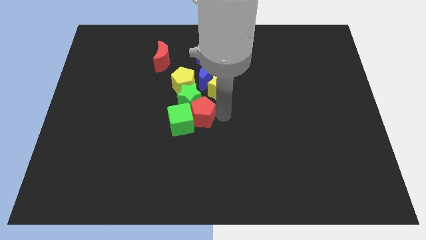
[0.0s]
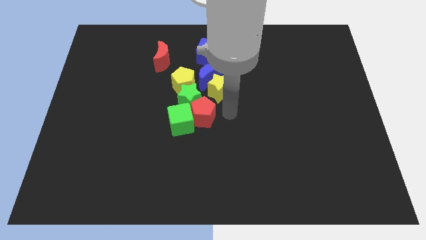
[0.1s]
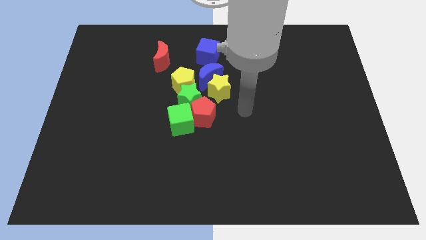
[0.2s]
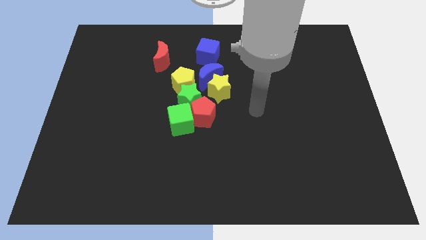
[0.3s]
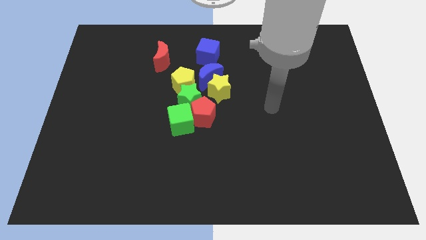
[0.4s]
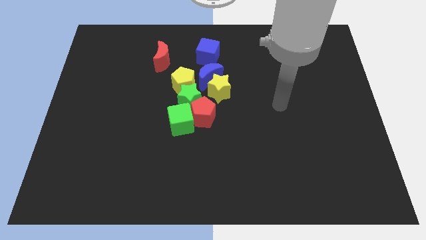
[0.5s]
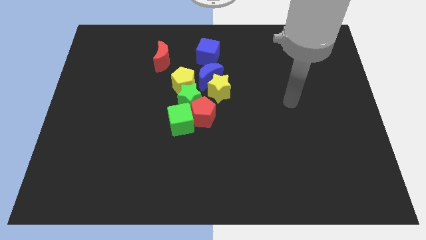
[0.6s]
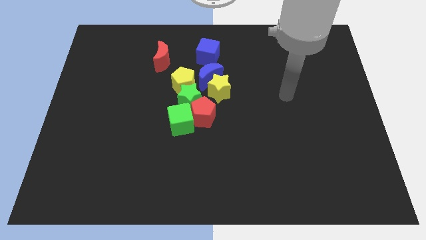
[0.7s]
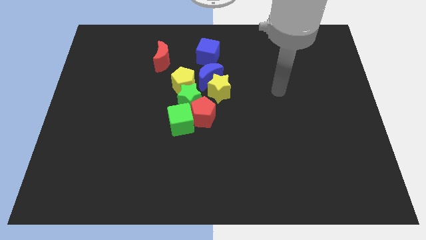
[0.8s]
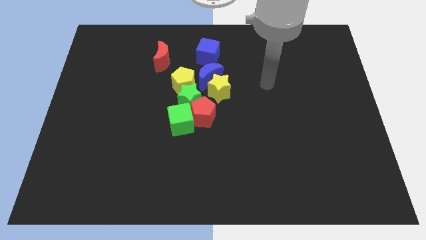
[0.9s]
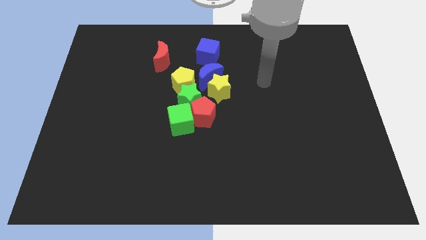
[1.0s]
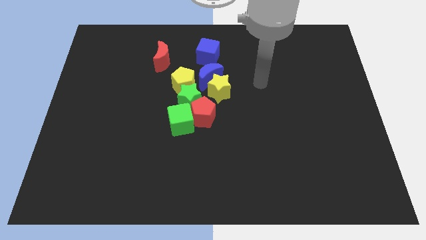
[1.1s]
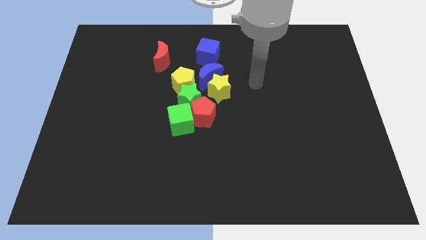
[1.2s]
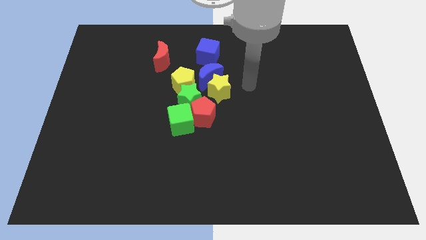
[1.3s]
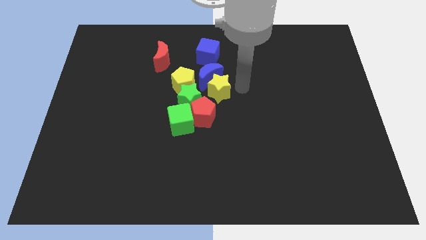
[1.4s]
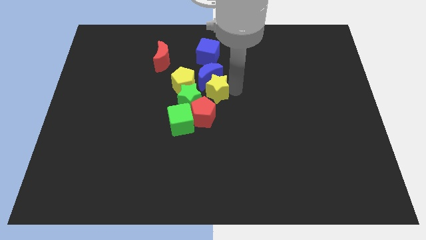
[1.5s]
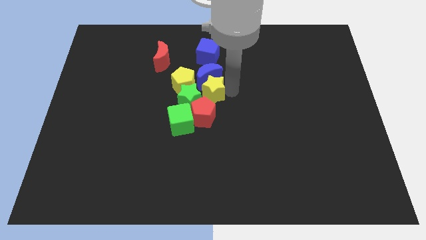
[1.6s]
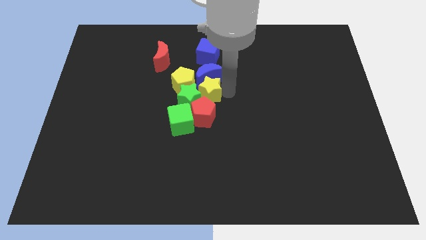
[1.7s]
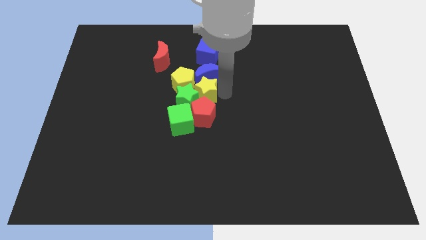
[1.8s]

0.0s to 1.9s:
push the group of blocks to the left side of the board

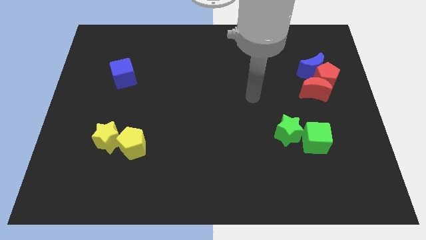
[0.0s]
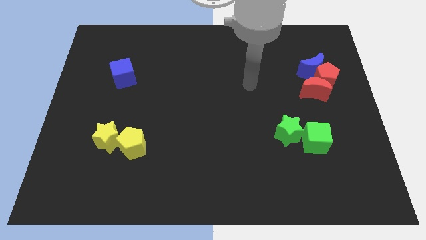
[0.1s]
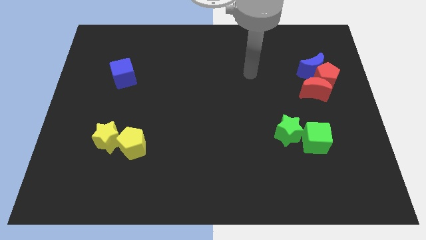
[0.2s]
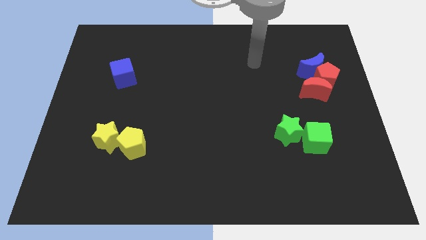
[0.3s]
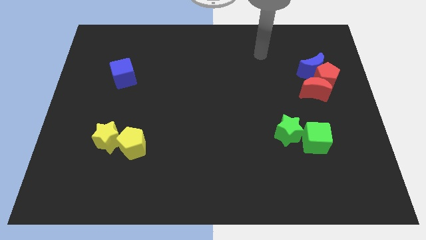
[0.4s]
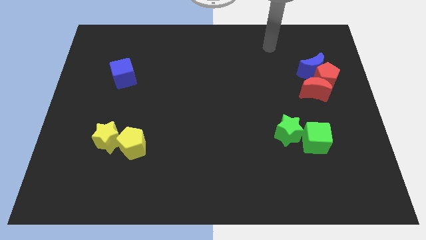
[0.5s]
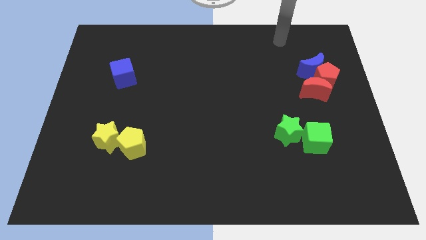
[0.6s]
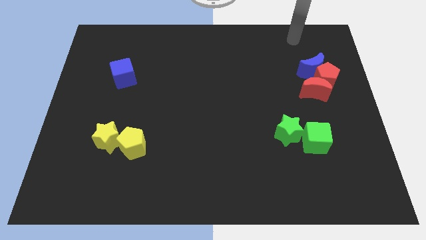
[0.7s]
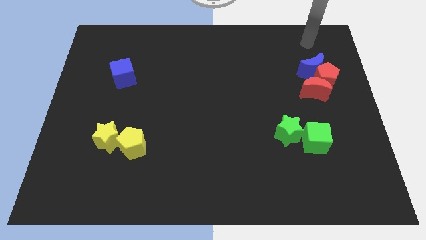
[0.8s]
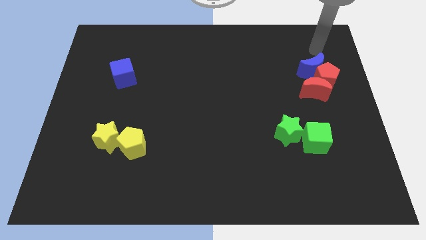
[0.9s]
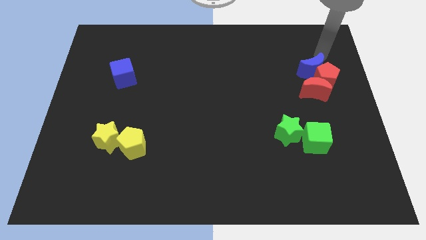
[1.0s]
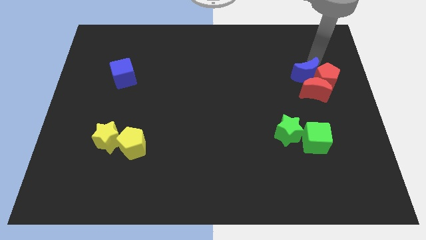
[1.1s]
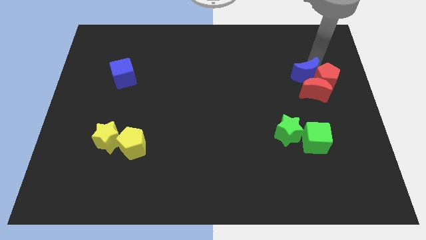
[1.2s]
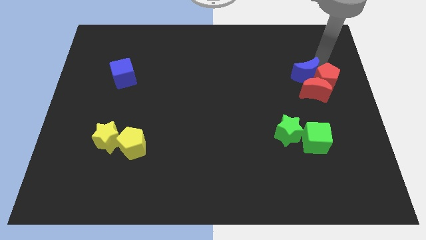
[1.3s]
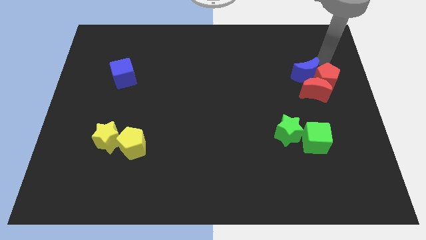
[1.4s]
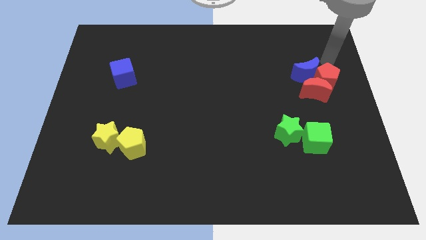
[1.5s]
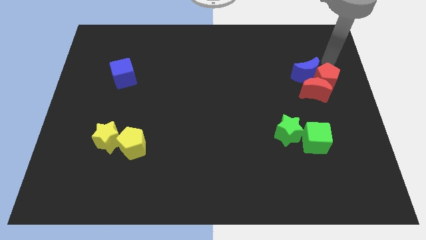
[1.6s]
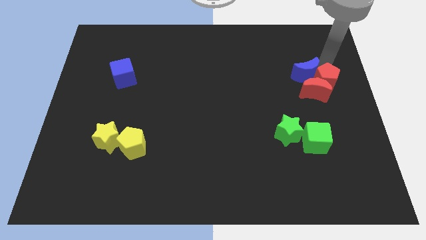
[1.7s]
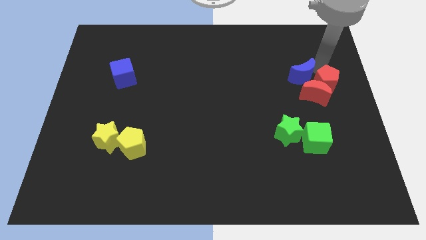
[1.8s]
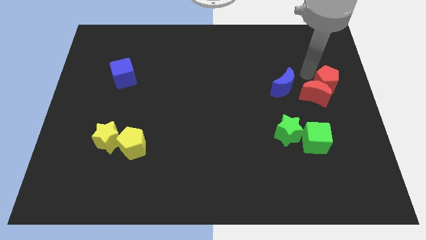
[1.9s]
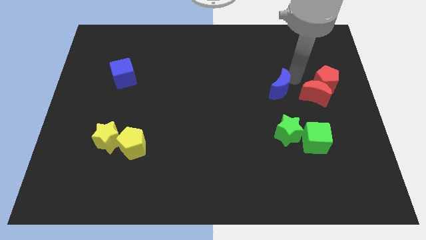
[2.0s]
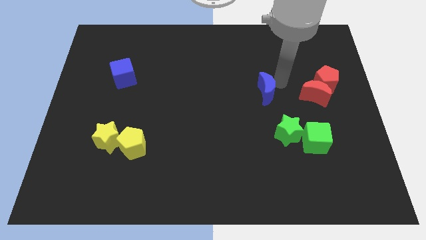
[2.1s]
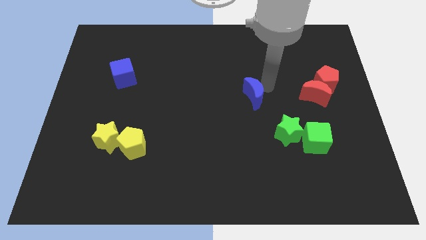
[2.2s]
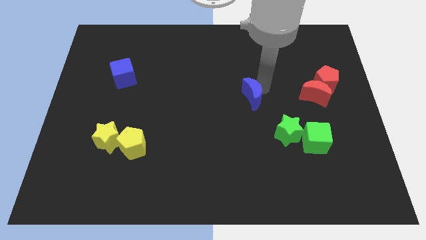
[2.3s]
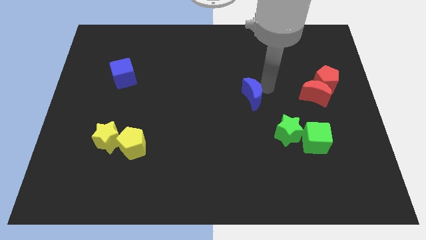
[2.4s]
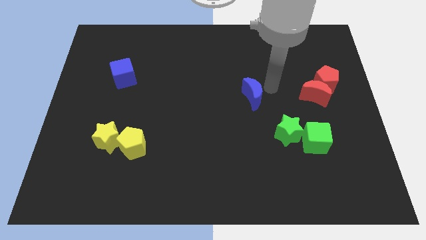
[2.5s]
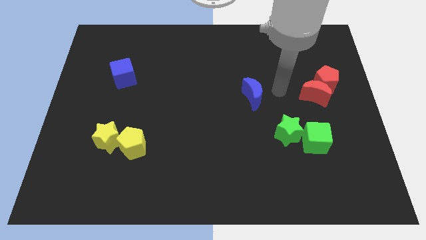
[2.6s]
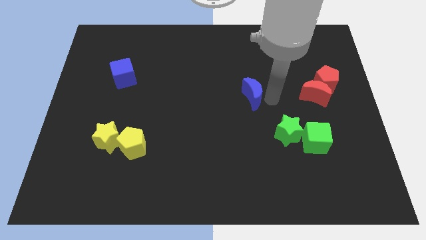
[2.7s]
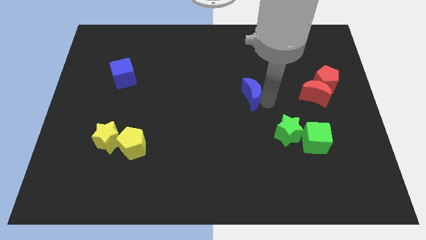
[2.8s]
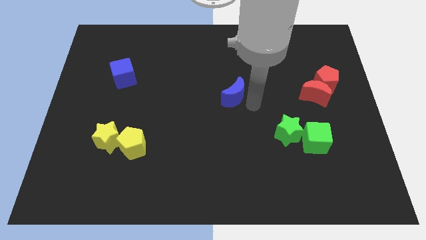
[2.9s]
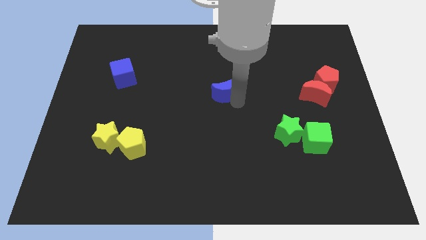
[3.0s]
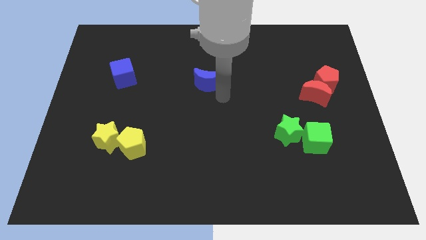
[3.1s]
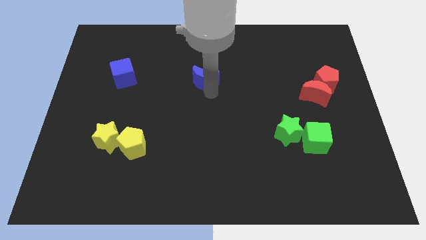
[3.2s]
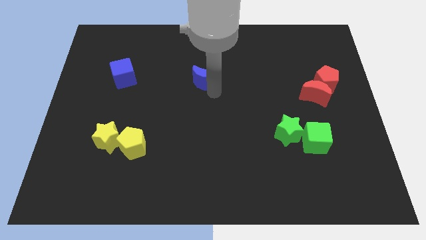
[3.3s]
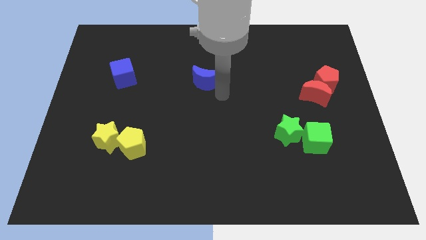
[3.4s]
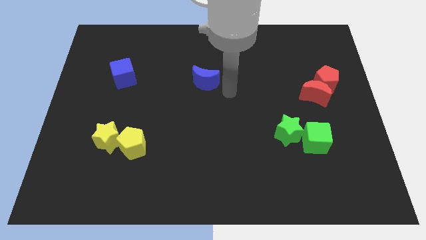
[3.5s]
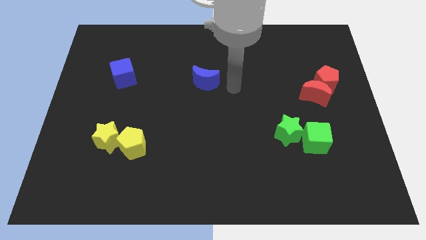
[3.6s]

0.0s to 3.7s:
move blue moon to the right of blue cube

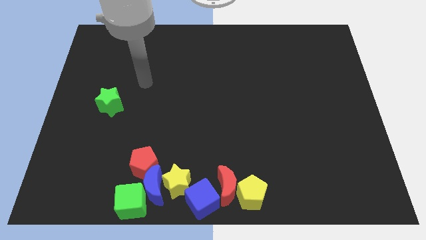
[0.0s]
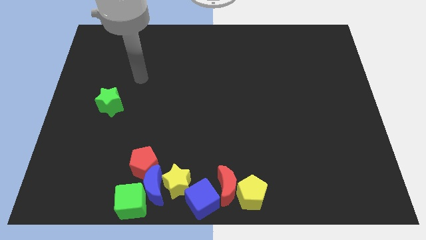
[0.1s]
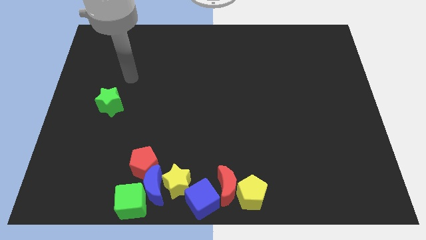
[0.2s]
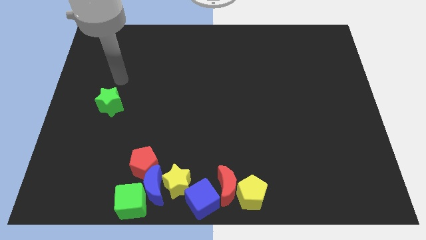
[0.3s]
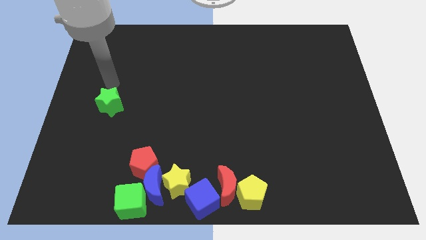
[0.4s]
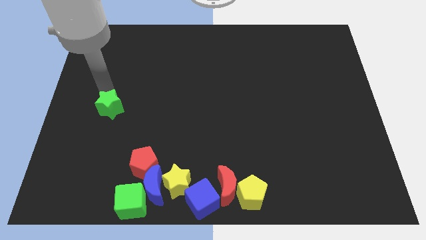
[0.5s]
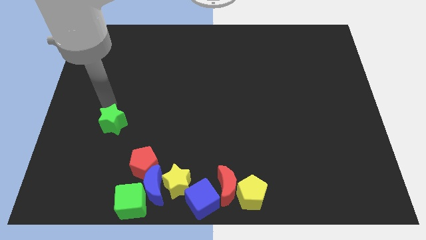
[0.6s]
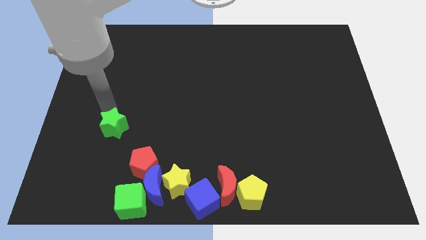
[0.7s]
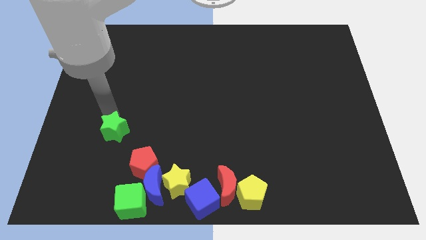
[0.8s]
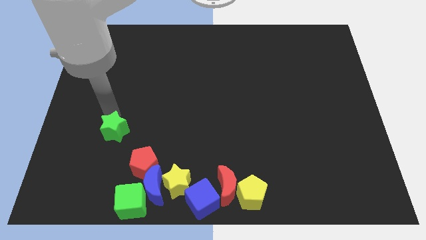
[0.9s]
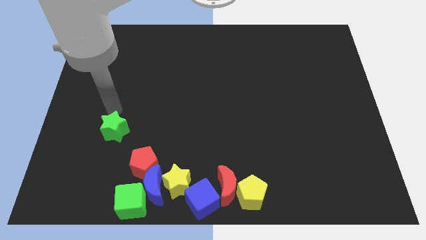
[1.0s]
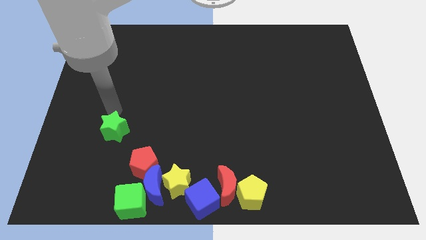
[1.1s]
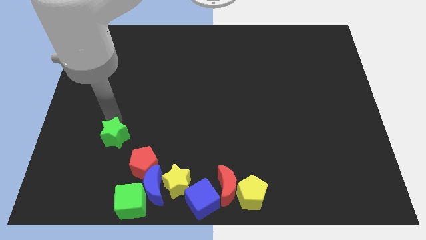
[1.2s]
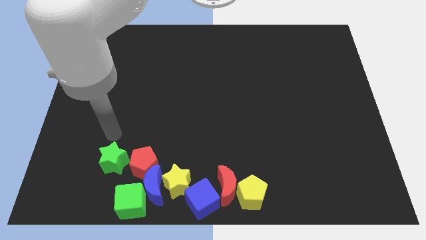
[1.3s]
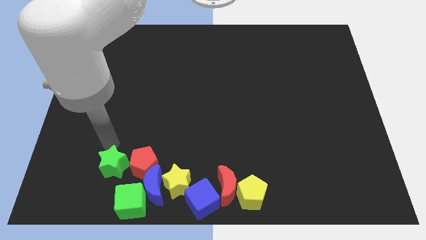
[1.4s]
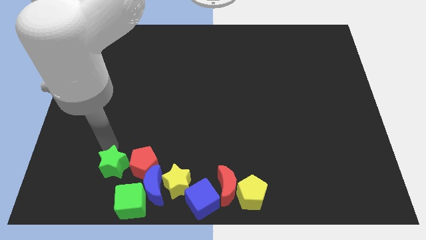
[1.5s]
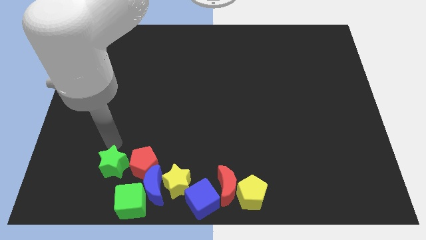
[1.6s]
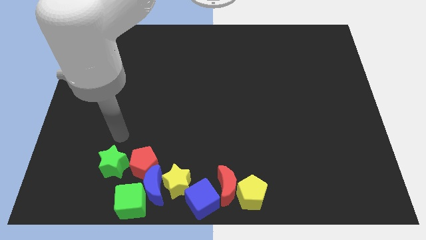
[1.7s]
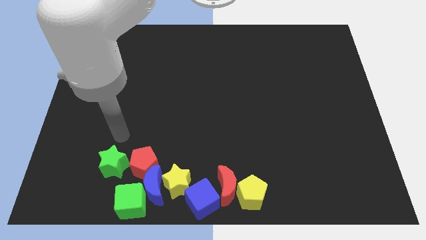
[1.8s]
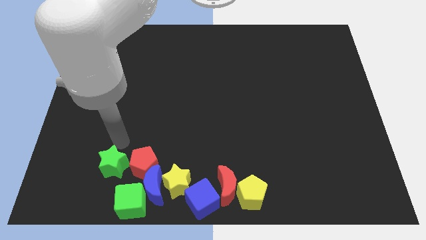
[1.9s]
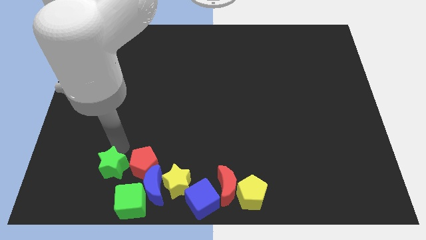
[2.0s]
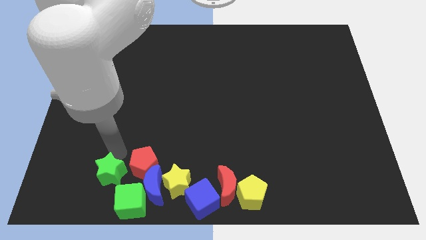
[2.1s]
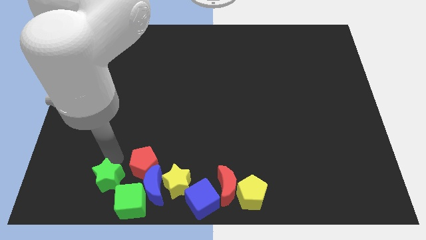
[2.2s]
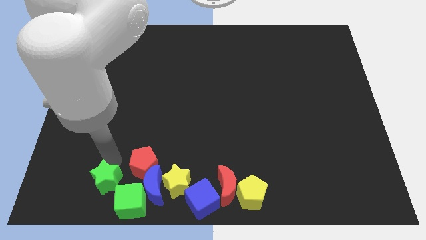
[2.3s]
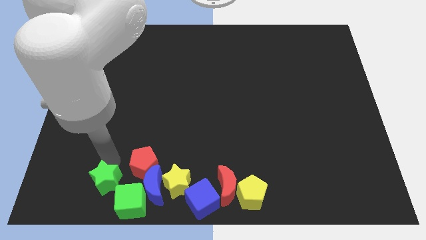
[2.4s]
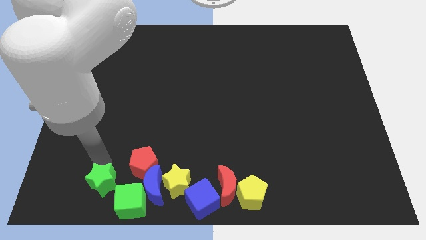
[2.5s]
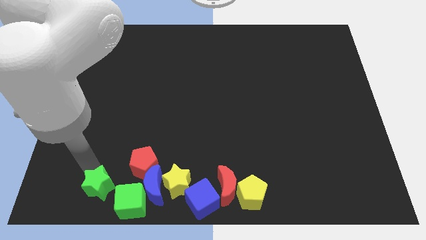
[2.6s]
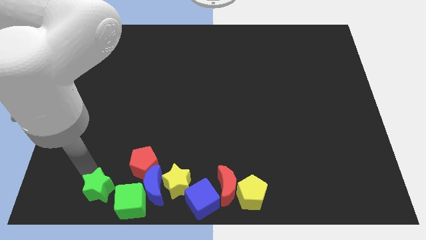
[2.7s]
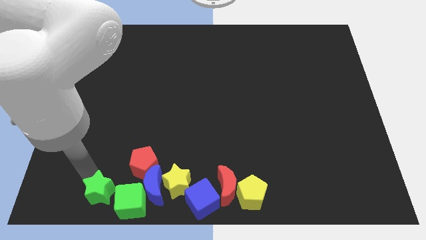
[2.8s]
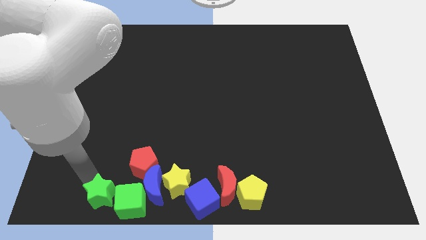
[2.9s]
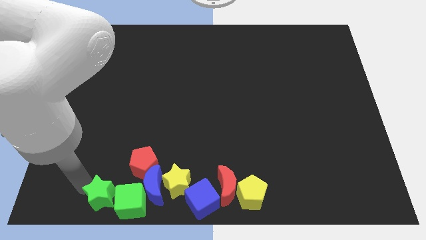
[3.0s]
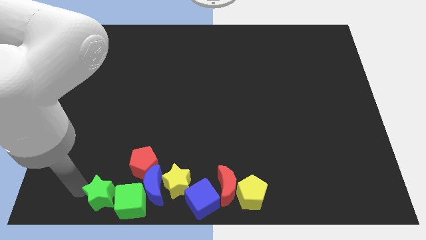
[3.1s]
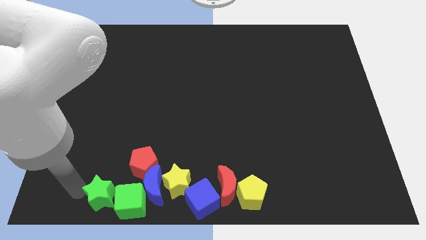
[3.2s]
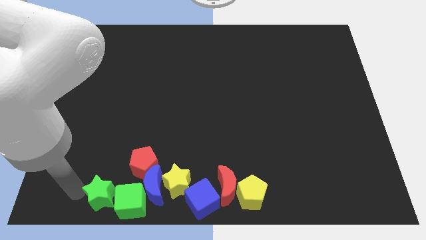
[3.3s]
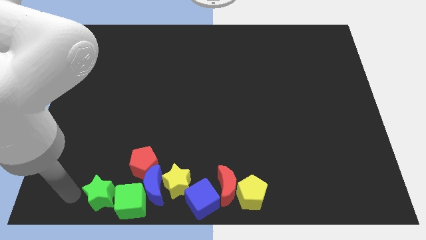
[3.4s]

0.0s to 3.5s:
slide the green star left to the green cube
